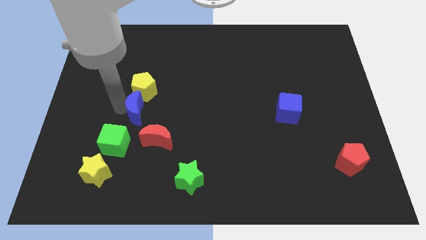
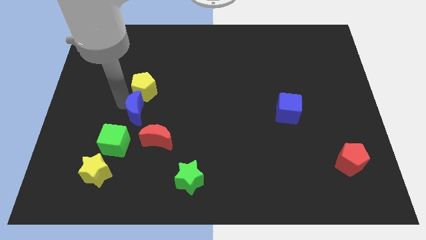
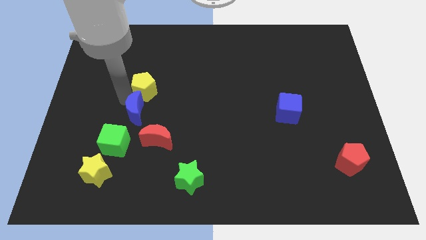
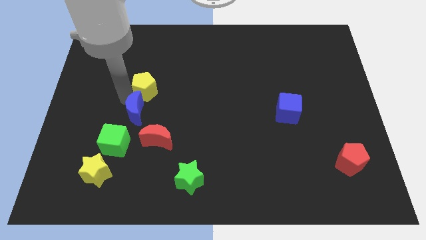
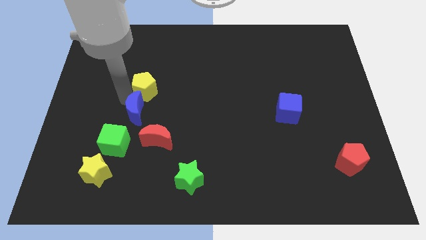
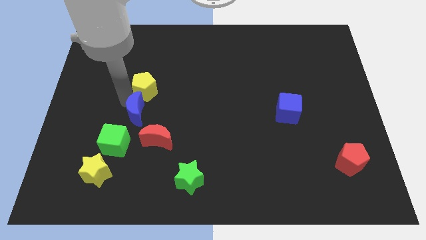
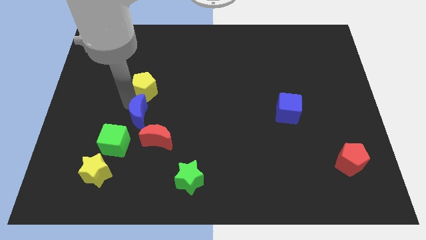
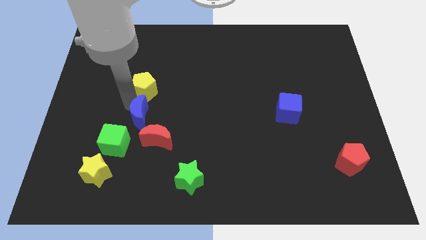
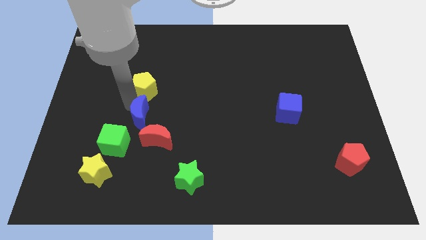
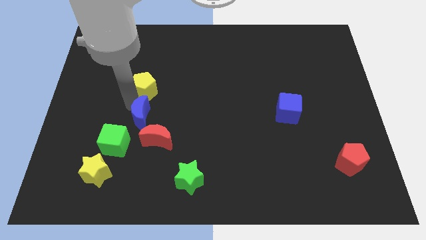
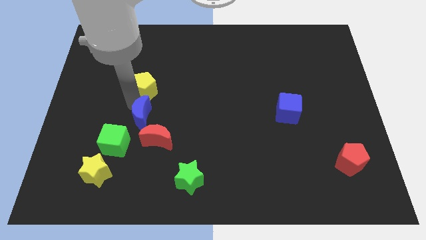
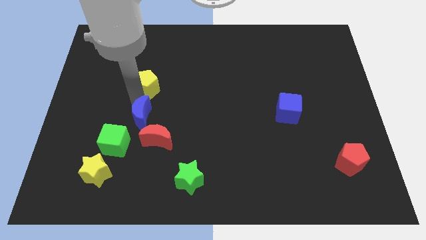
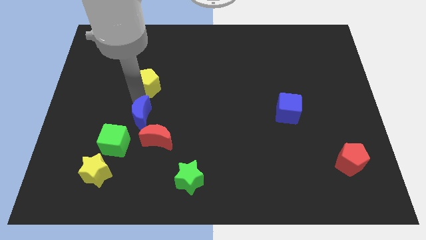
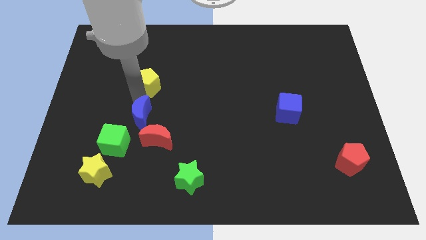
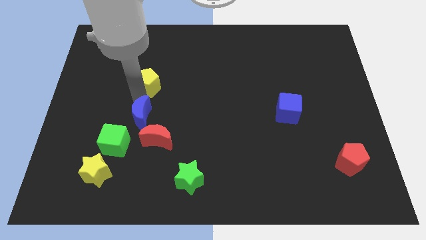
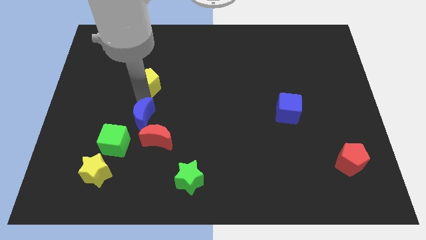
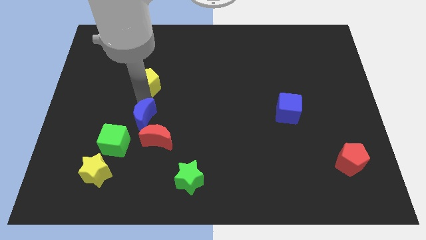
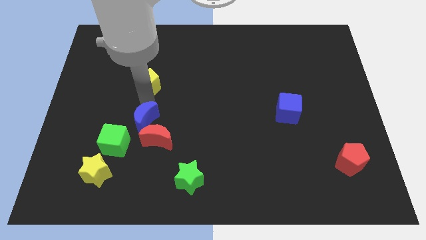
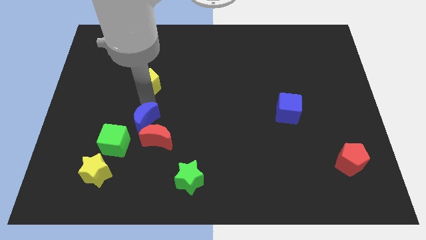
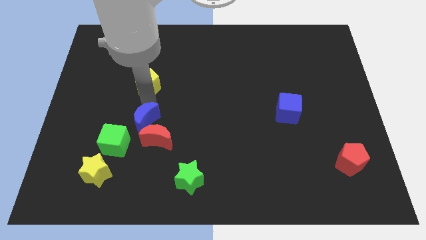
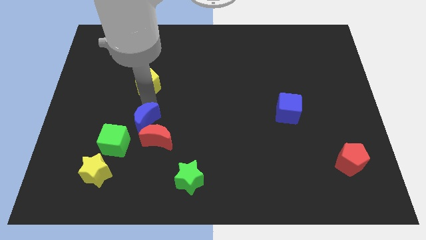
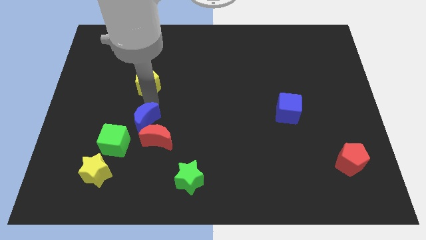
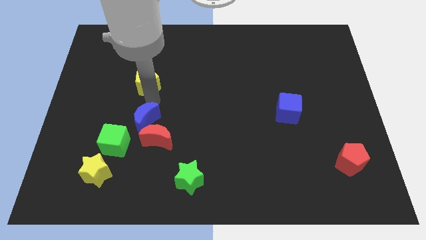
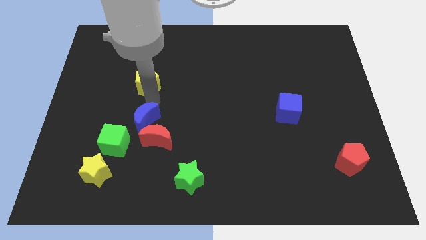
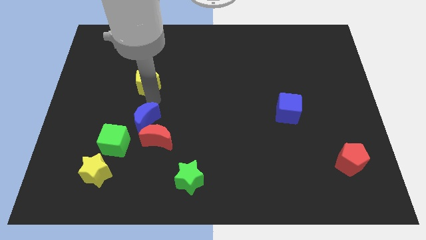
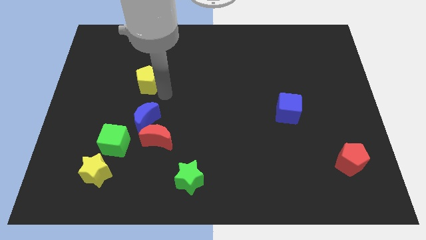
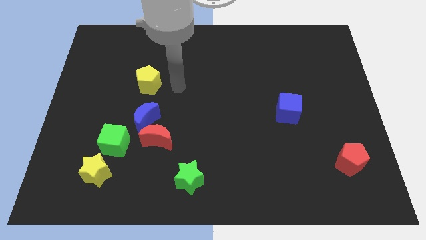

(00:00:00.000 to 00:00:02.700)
separate yellow pentagon from blue moon

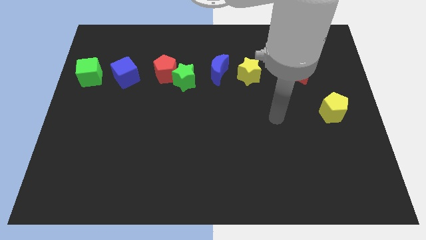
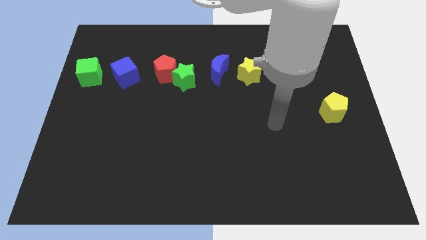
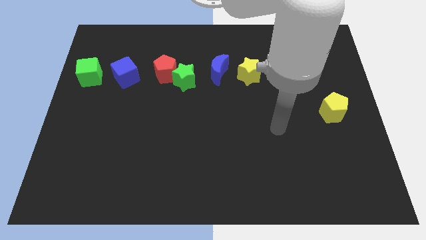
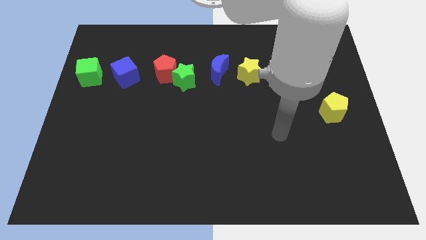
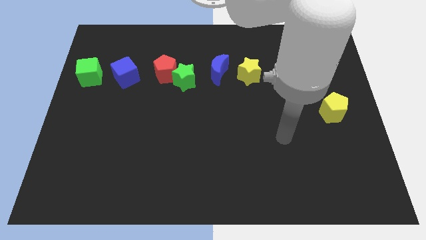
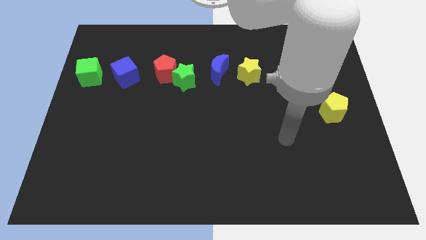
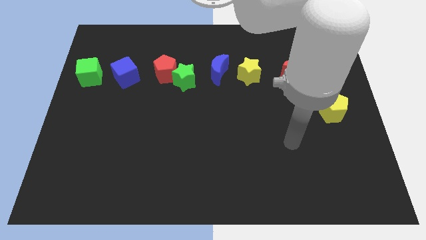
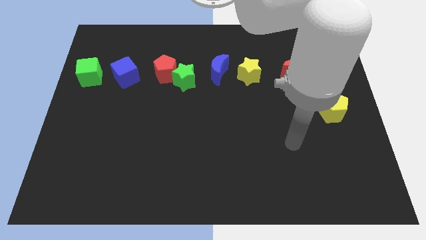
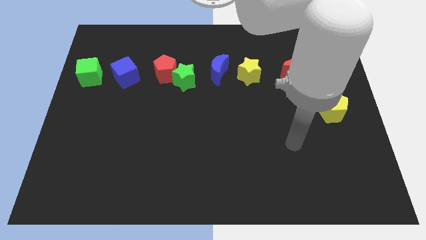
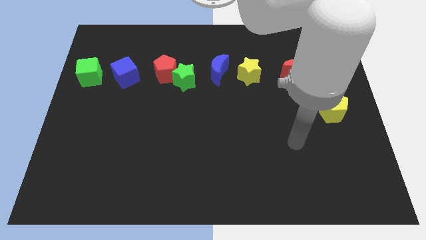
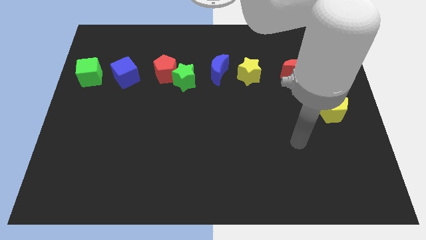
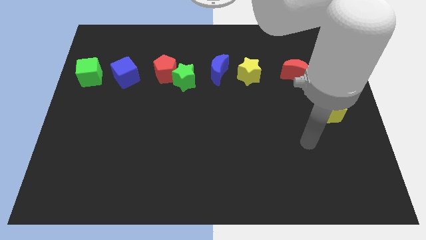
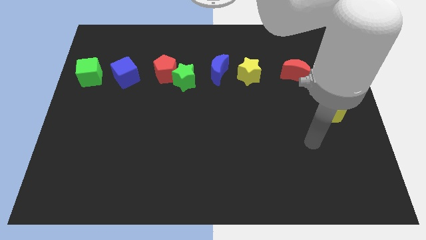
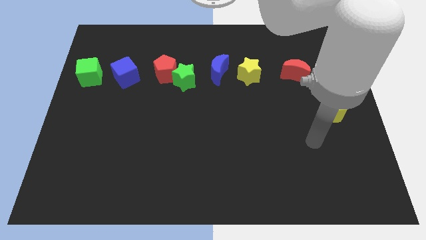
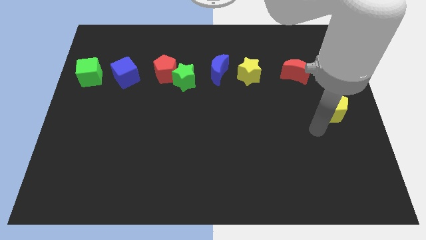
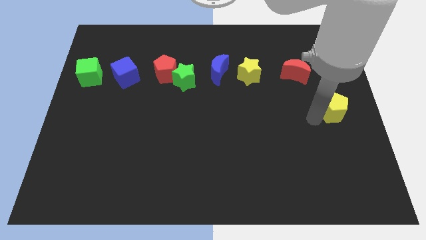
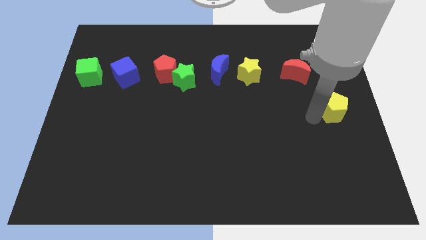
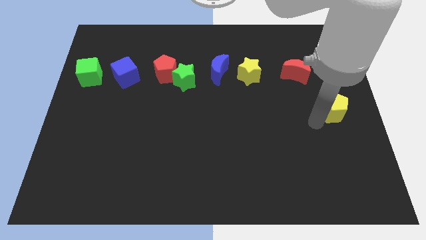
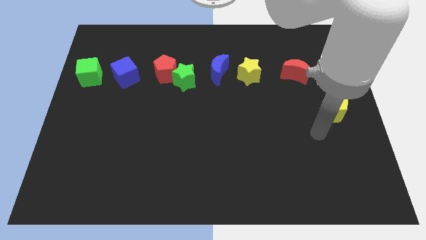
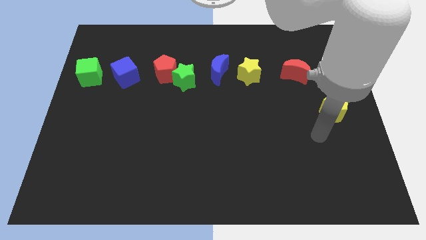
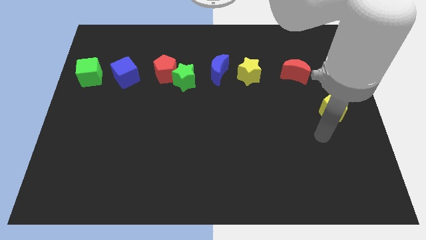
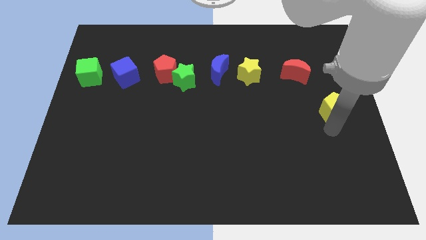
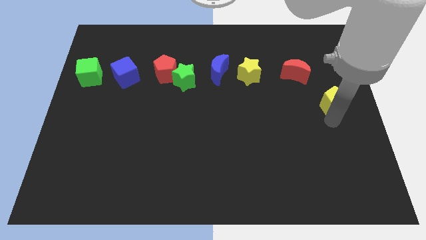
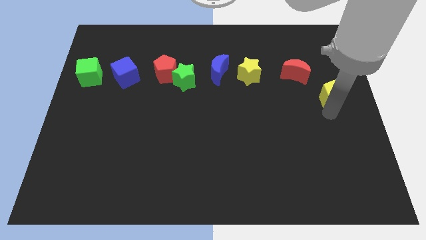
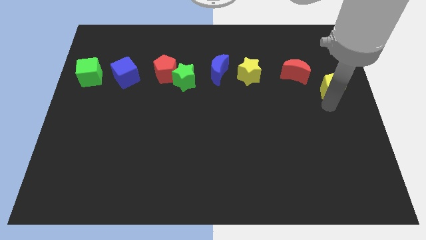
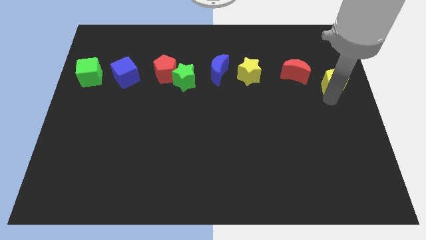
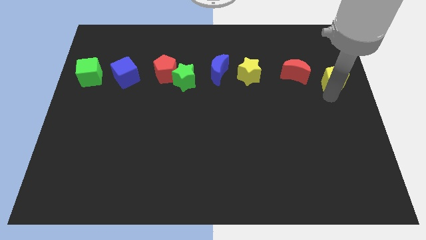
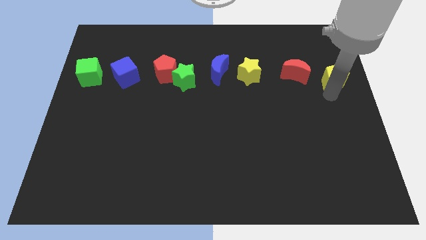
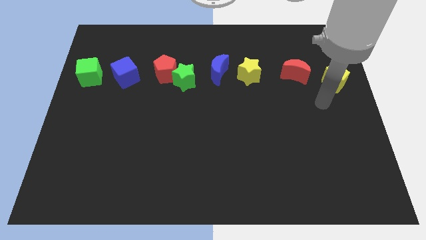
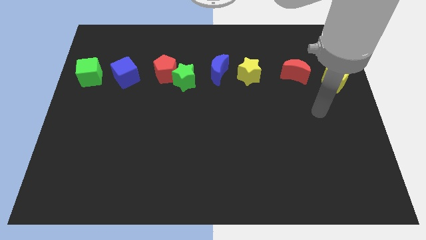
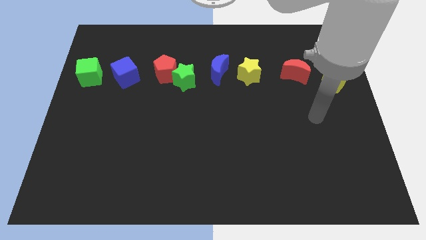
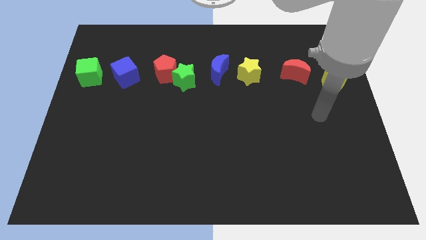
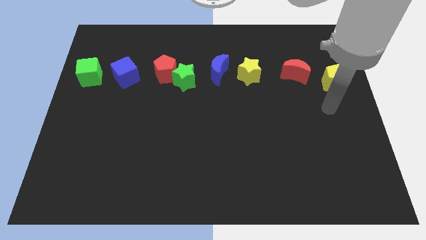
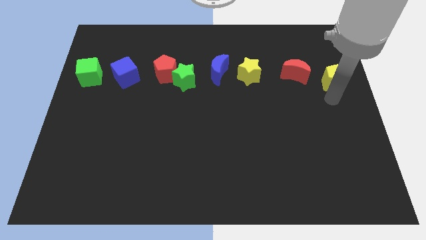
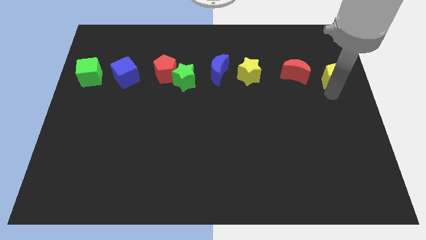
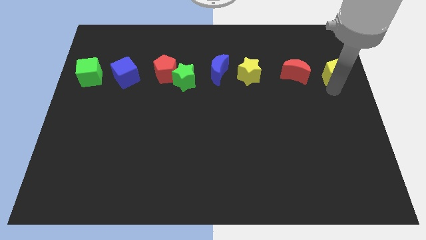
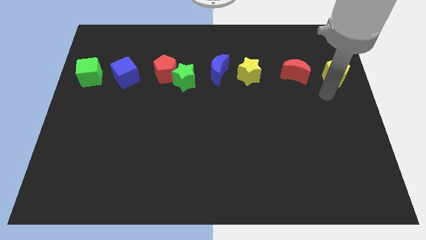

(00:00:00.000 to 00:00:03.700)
place the yellow pentagon to the right of the red crescent

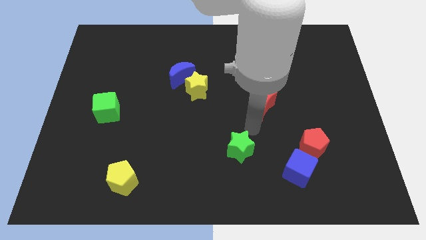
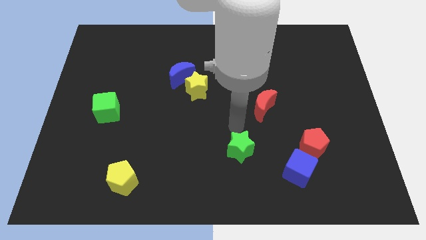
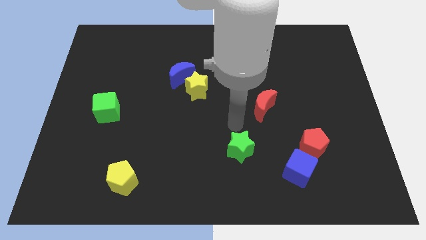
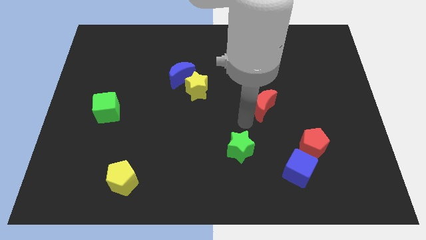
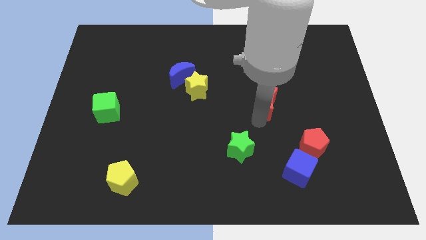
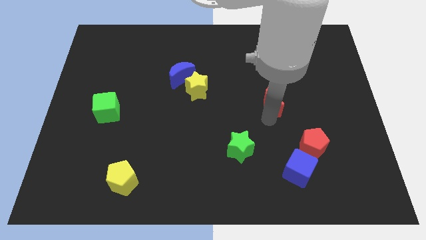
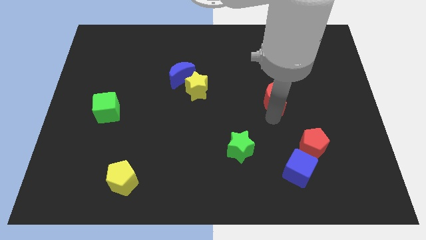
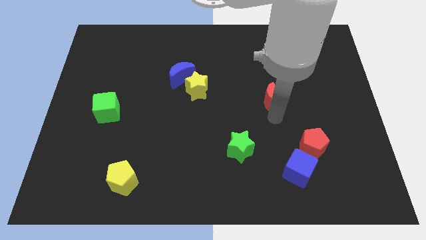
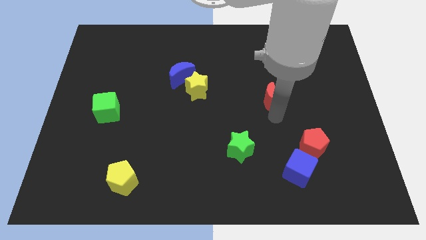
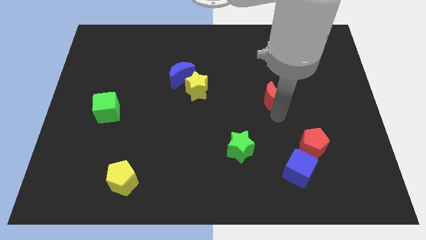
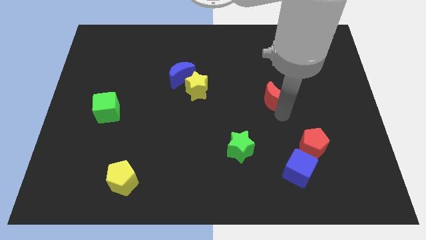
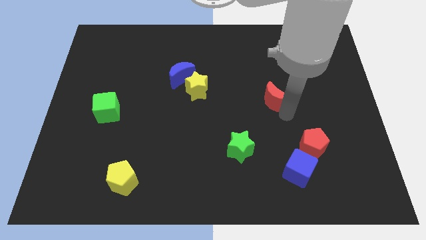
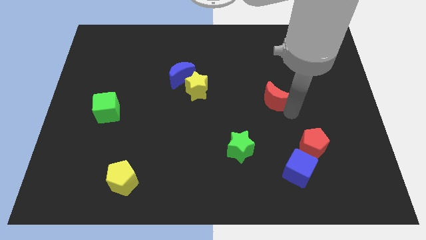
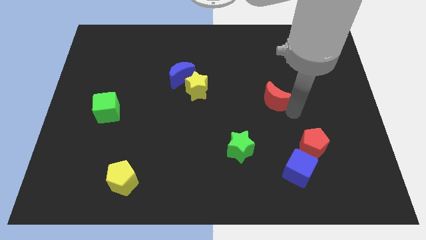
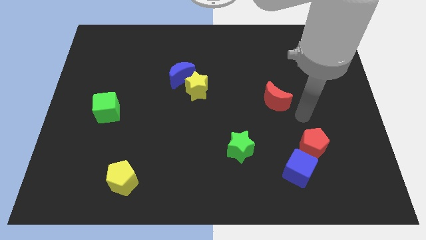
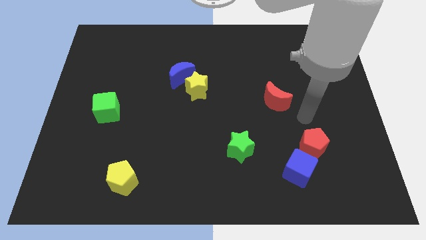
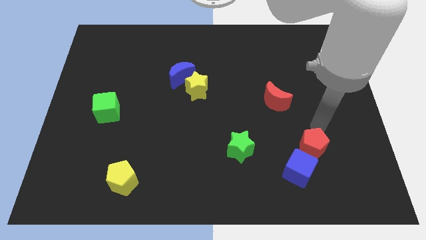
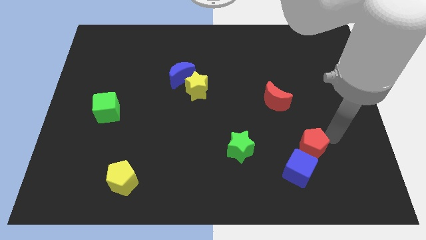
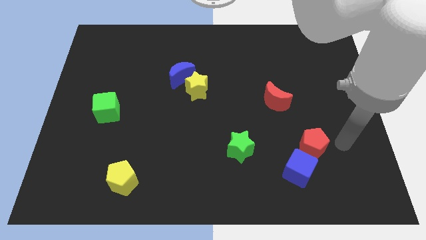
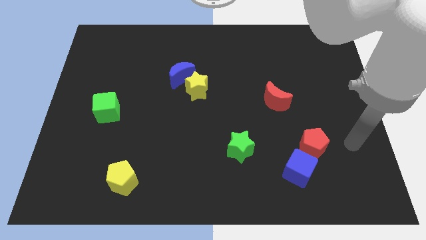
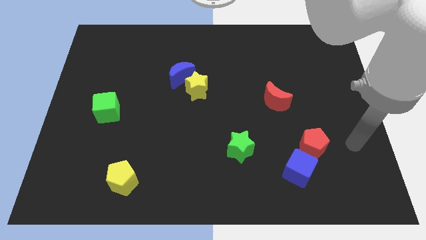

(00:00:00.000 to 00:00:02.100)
slightly push the red crescent towards right

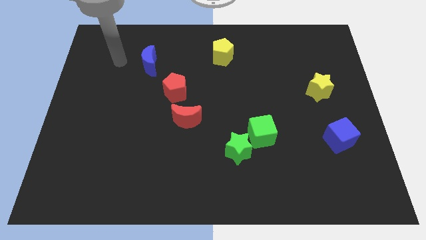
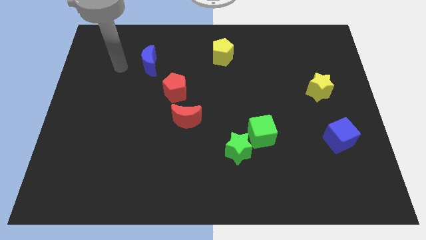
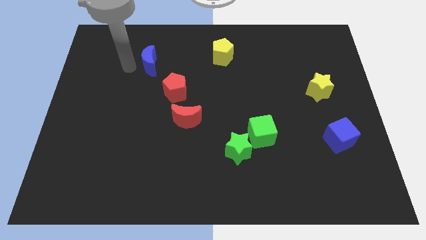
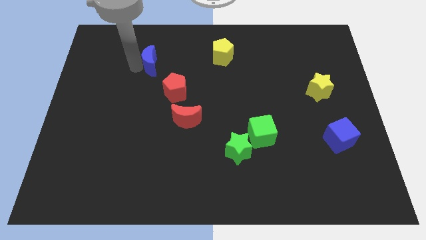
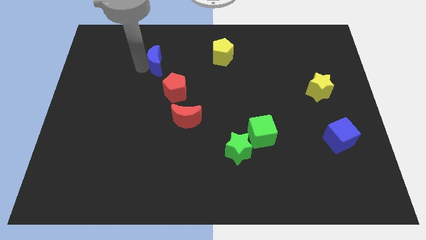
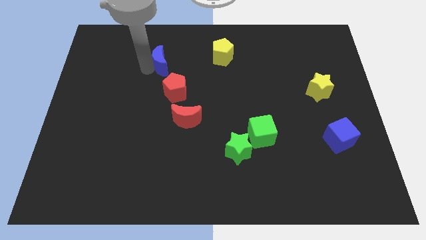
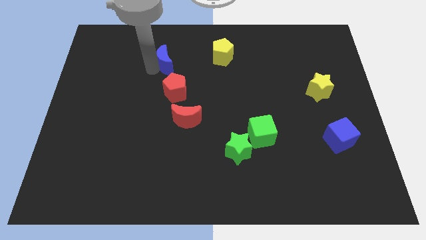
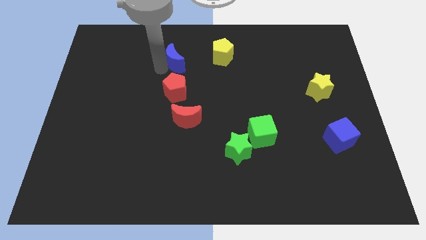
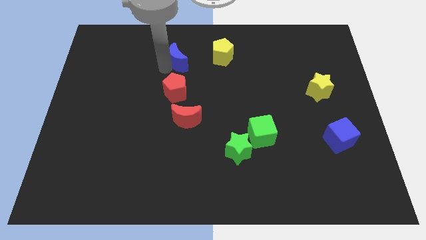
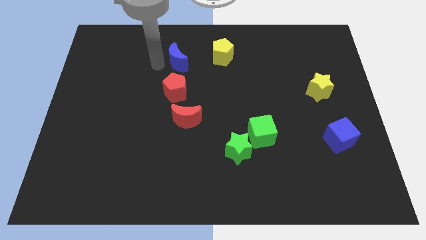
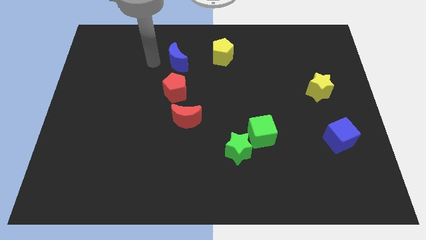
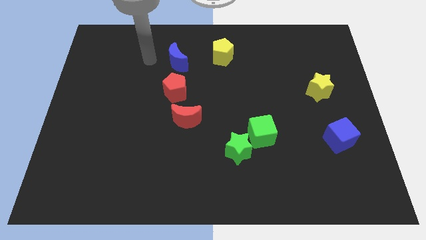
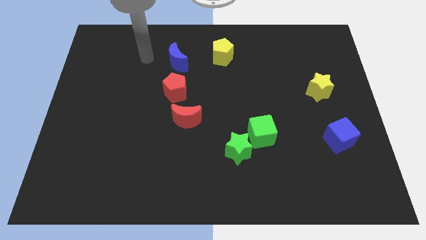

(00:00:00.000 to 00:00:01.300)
move the blue crescent to the top of the red pentagon
